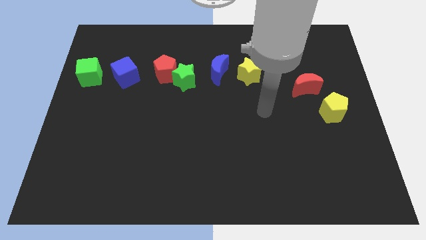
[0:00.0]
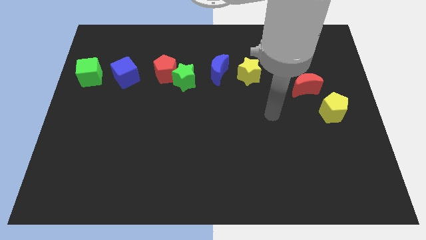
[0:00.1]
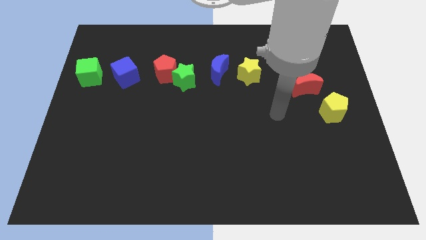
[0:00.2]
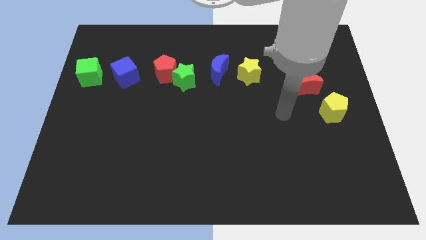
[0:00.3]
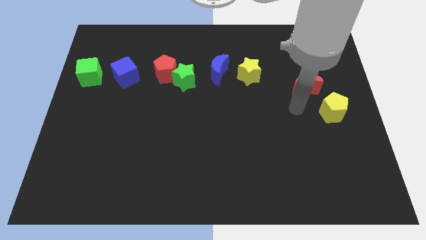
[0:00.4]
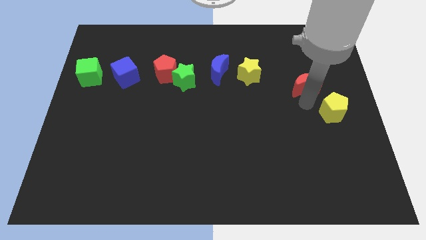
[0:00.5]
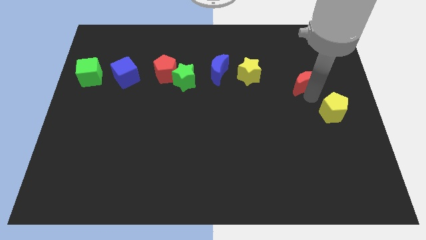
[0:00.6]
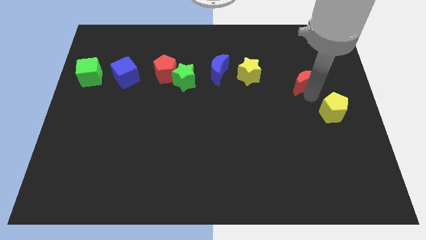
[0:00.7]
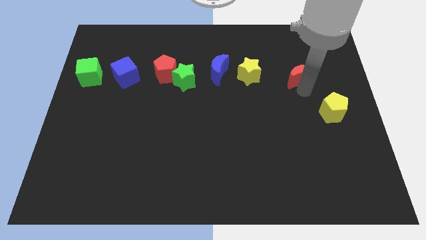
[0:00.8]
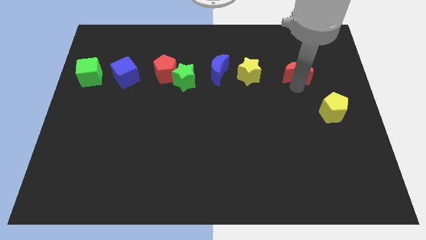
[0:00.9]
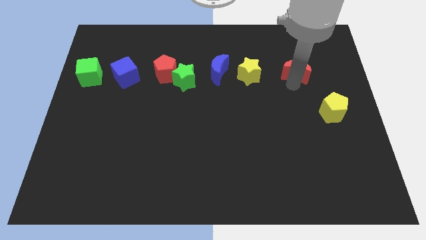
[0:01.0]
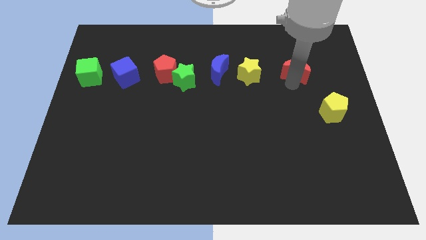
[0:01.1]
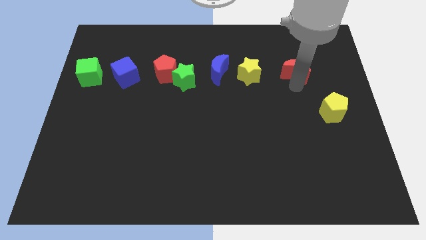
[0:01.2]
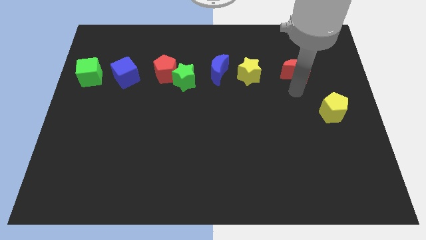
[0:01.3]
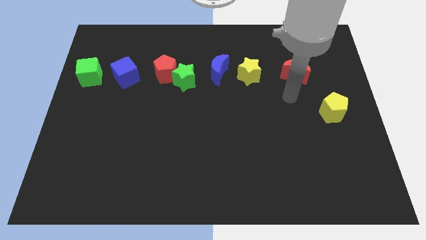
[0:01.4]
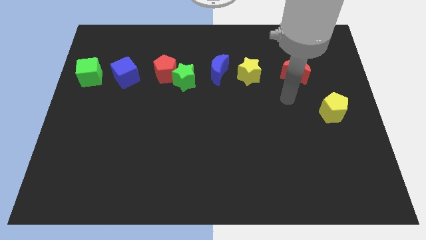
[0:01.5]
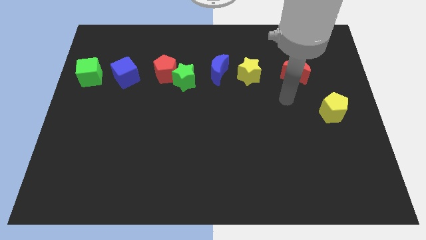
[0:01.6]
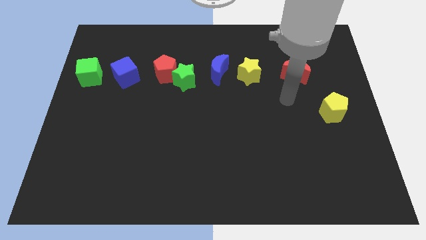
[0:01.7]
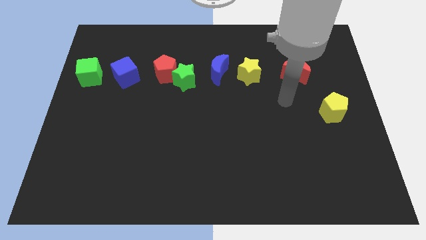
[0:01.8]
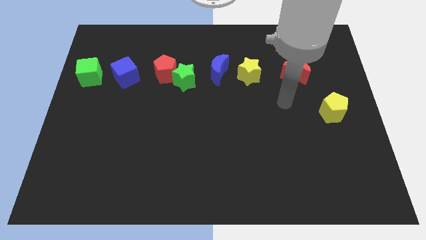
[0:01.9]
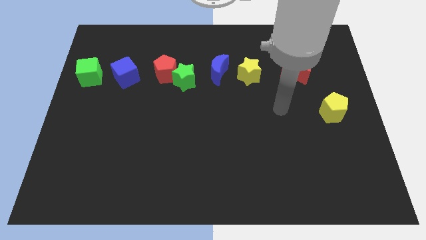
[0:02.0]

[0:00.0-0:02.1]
move the red moon to the right of the yellow star

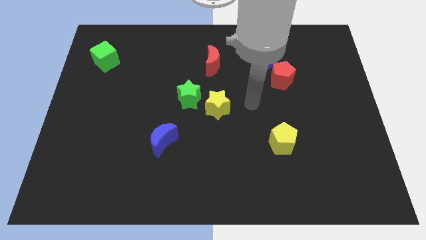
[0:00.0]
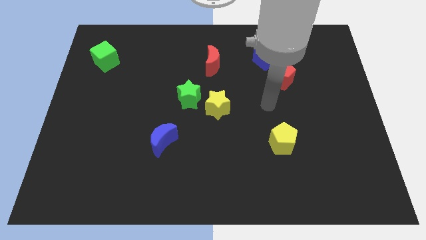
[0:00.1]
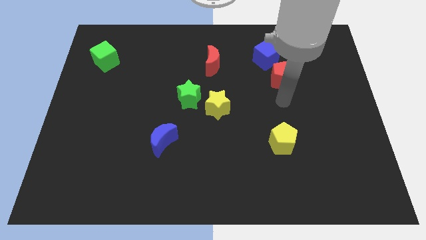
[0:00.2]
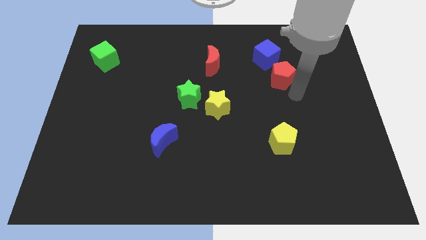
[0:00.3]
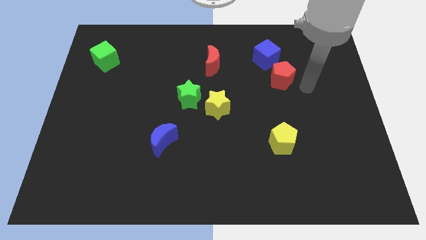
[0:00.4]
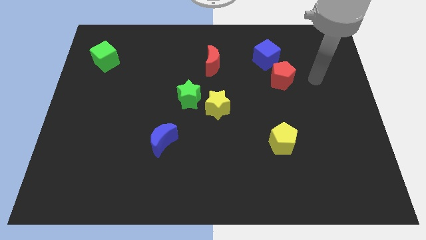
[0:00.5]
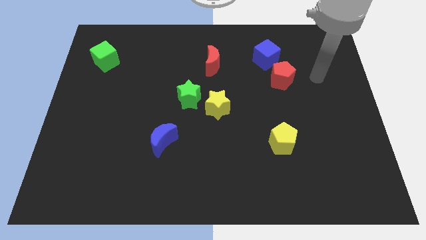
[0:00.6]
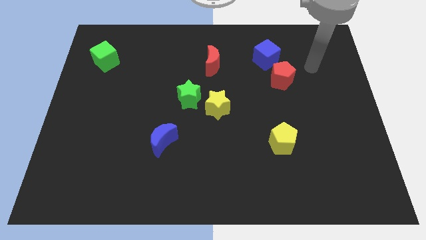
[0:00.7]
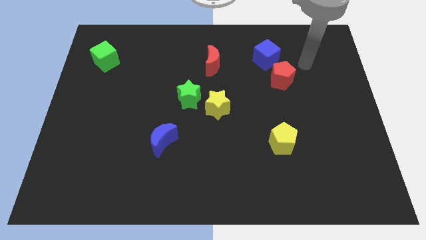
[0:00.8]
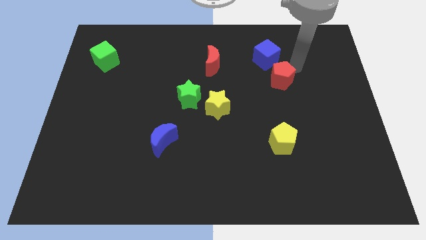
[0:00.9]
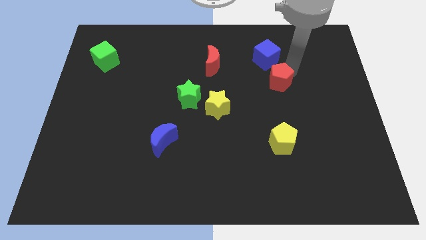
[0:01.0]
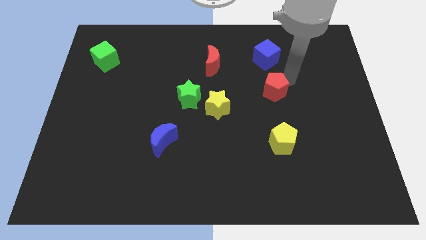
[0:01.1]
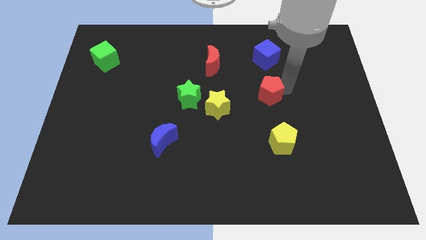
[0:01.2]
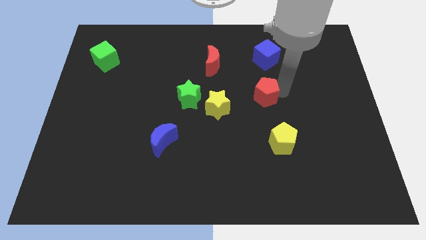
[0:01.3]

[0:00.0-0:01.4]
move the red pentagon to the bottom of the blue cube

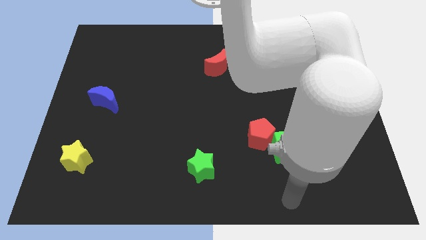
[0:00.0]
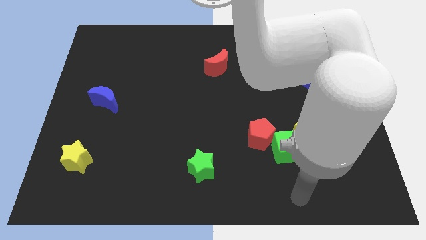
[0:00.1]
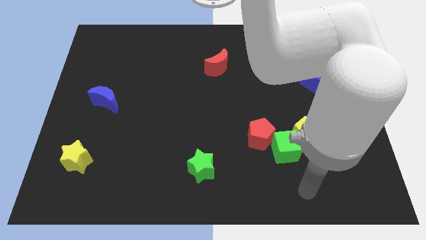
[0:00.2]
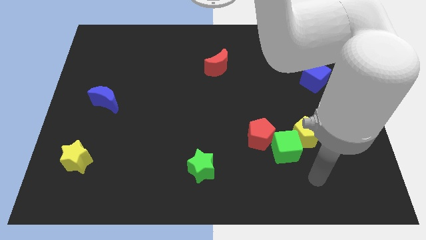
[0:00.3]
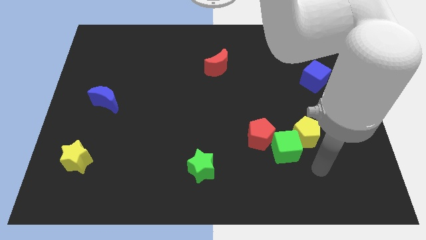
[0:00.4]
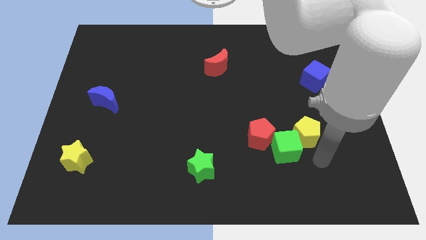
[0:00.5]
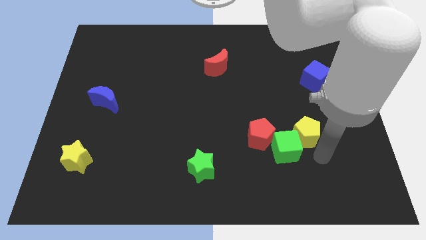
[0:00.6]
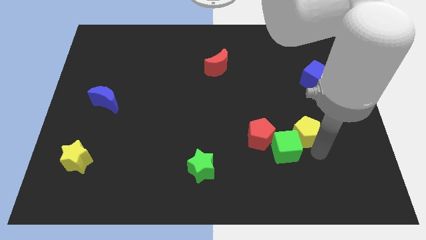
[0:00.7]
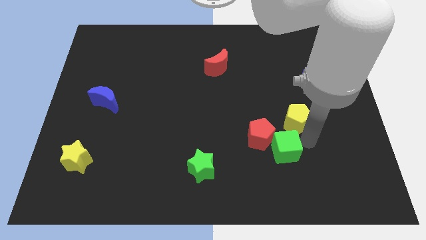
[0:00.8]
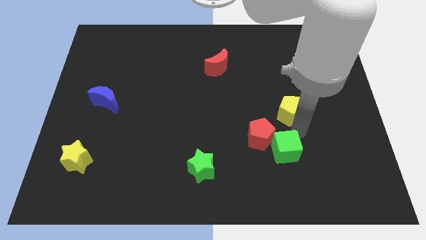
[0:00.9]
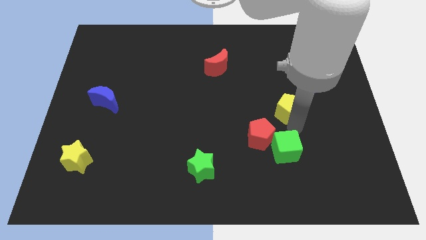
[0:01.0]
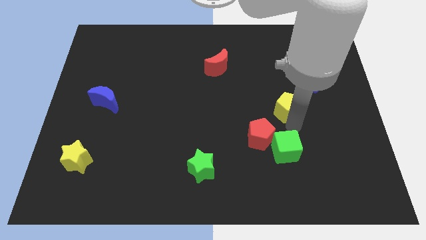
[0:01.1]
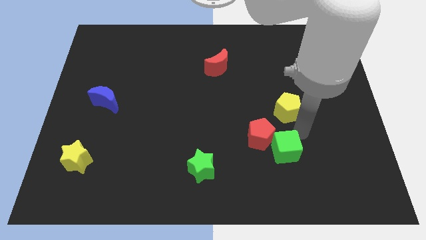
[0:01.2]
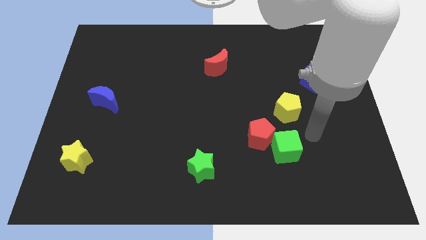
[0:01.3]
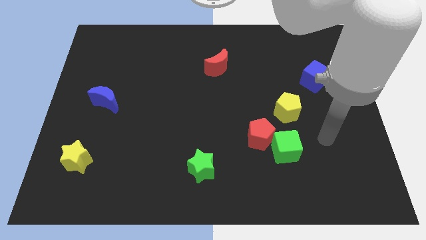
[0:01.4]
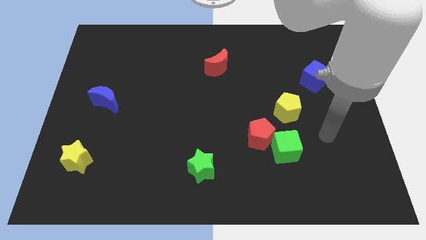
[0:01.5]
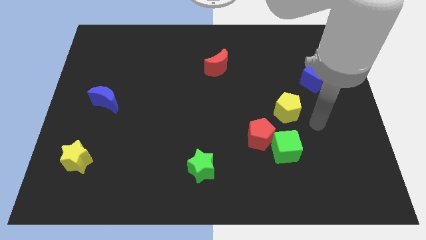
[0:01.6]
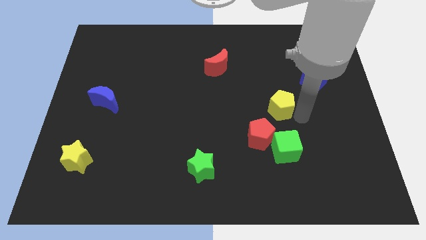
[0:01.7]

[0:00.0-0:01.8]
slide the yellow pentagon on the top of the green cube

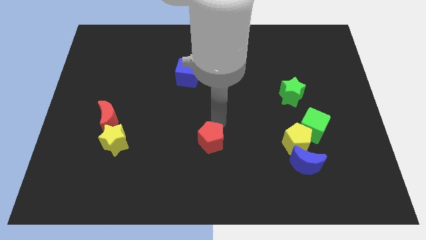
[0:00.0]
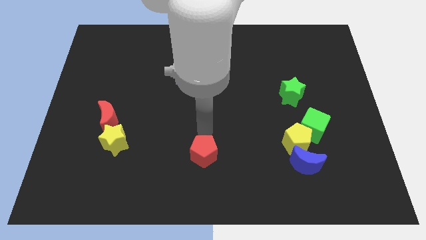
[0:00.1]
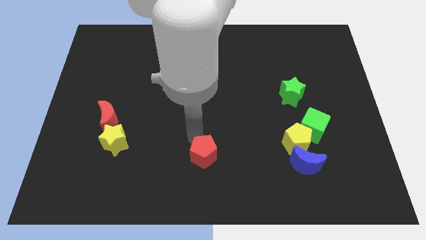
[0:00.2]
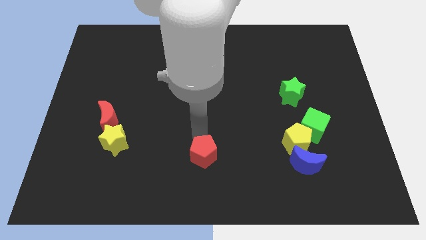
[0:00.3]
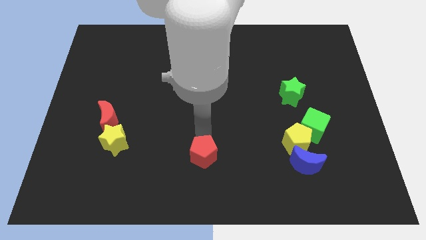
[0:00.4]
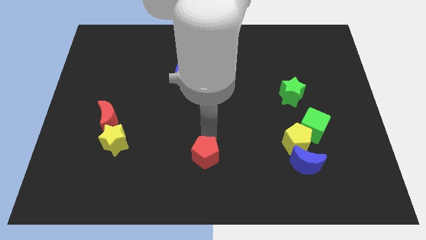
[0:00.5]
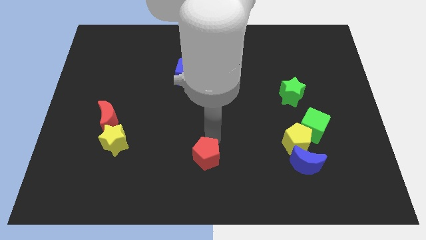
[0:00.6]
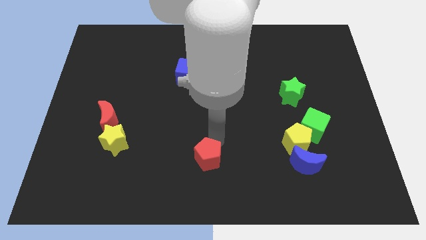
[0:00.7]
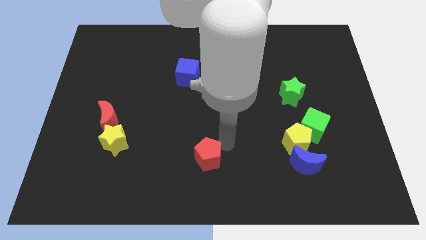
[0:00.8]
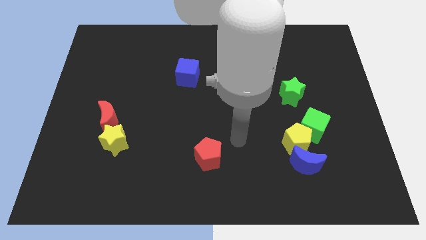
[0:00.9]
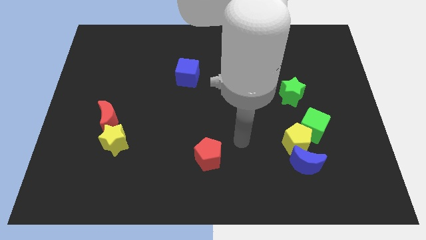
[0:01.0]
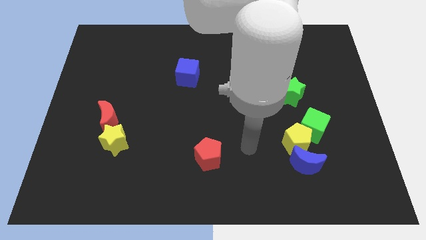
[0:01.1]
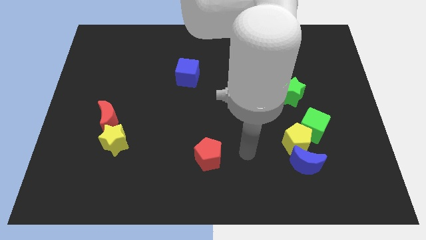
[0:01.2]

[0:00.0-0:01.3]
push the red pentagon near to the bottom center

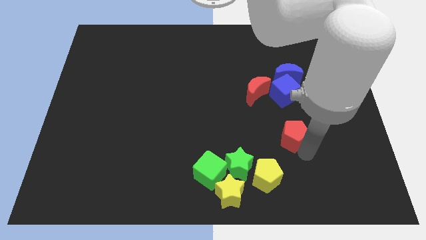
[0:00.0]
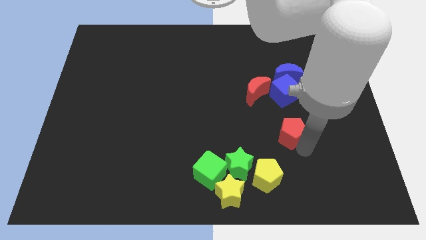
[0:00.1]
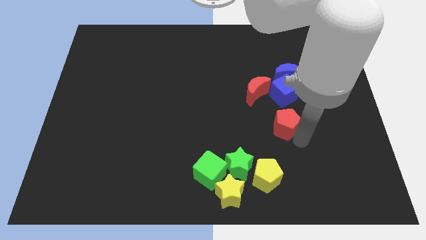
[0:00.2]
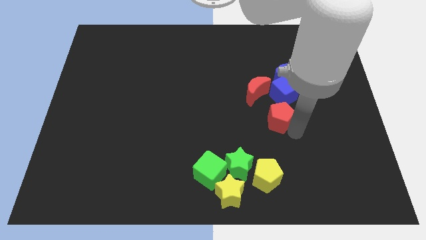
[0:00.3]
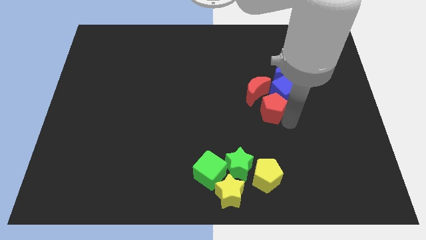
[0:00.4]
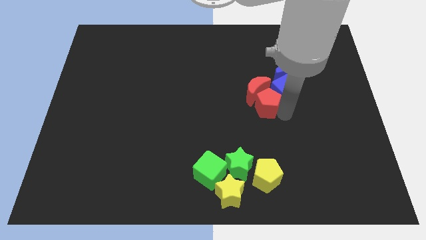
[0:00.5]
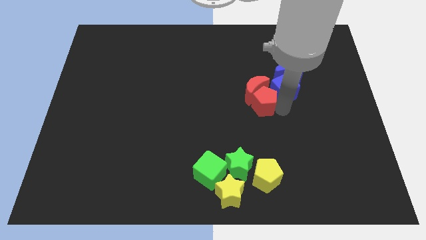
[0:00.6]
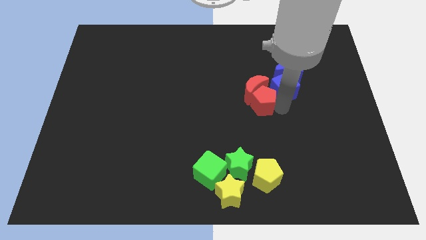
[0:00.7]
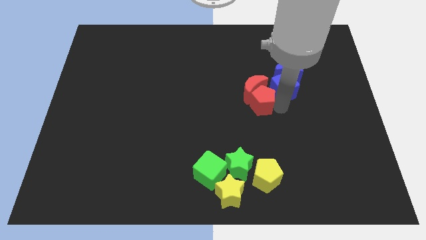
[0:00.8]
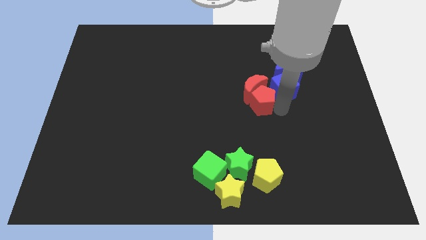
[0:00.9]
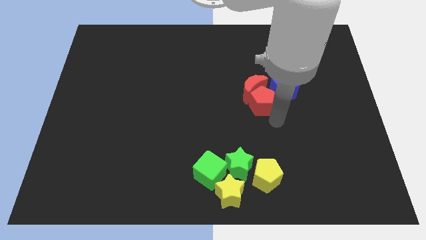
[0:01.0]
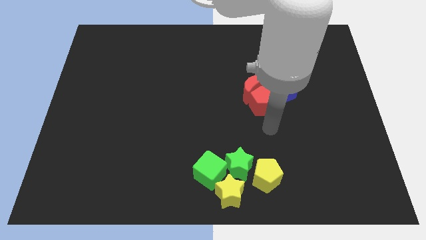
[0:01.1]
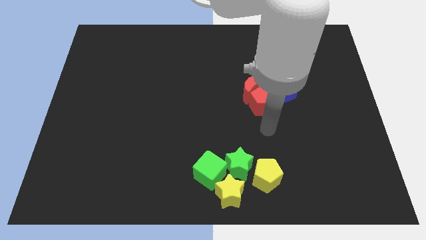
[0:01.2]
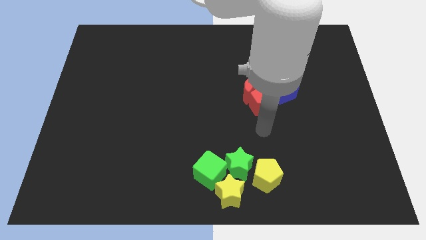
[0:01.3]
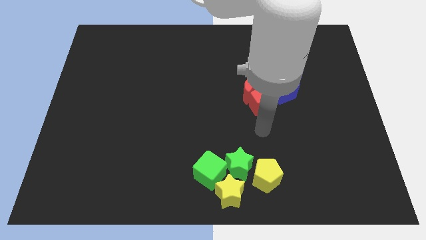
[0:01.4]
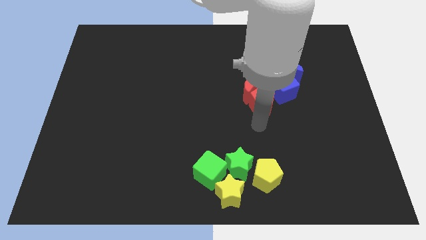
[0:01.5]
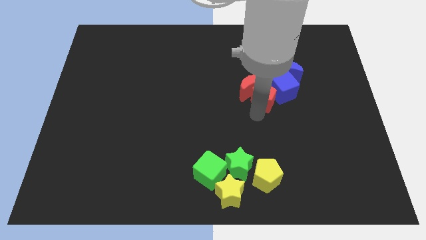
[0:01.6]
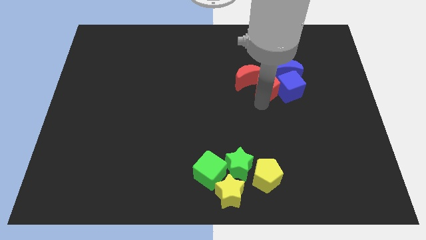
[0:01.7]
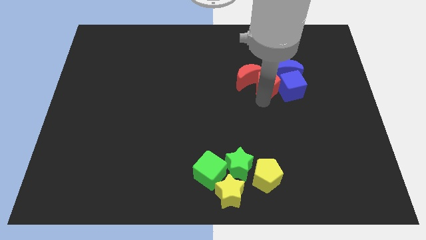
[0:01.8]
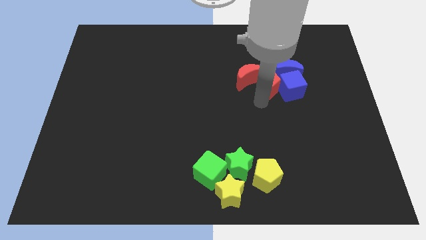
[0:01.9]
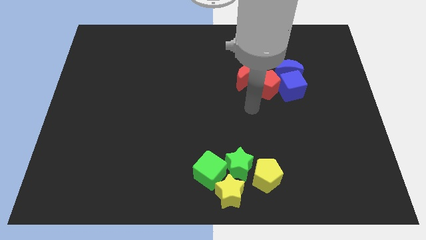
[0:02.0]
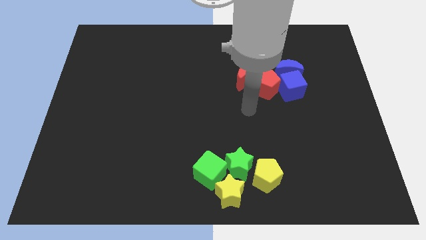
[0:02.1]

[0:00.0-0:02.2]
group up the red blocks
